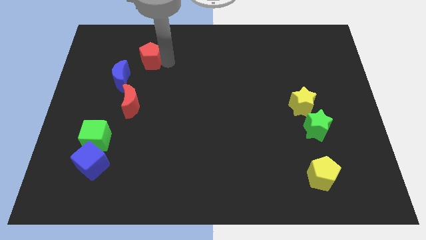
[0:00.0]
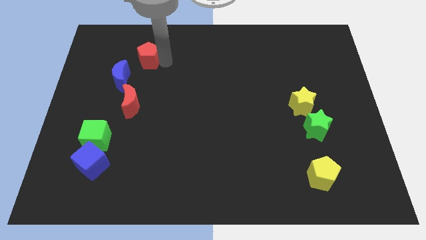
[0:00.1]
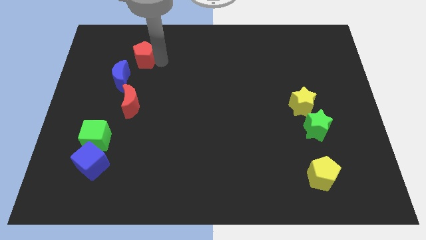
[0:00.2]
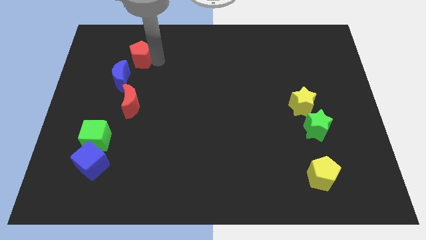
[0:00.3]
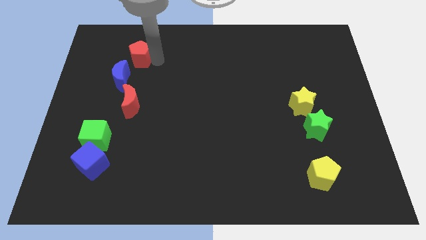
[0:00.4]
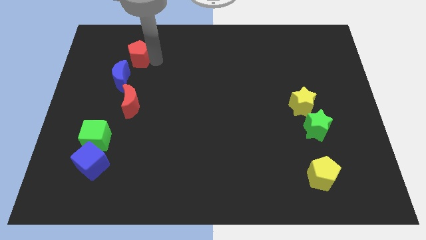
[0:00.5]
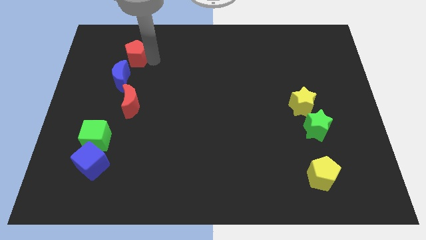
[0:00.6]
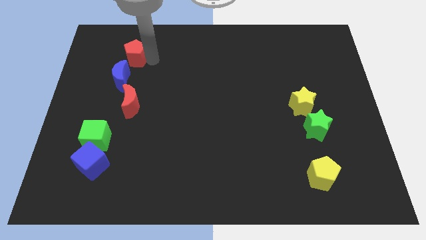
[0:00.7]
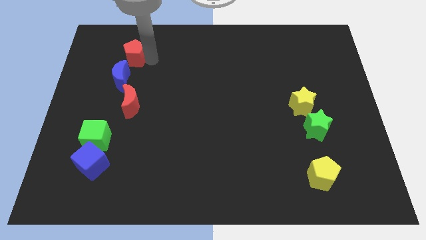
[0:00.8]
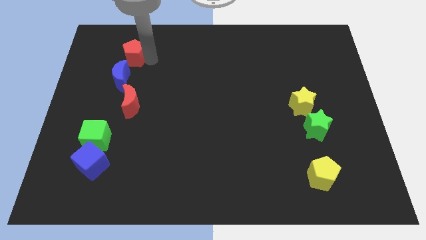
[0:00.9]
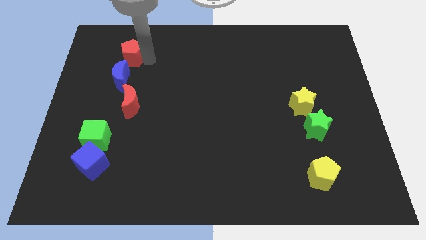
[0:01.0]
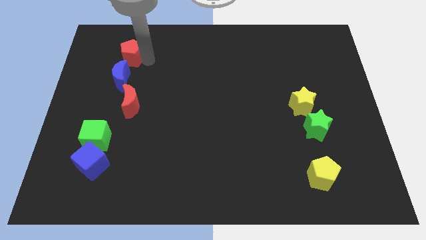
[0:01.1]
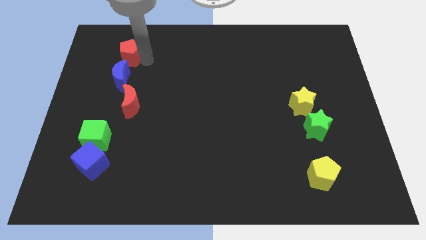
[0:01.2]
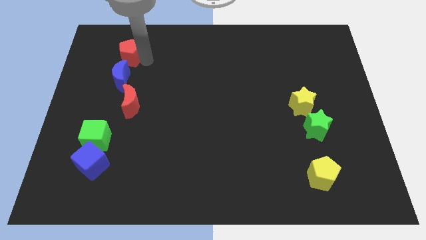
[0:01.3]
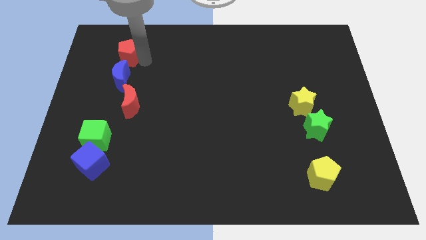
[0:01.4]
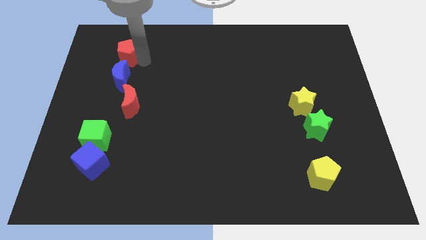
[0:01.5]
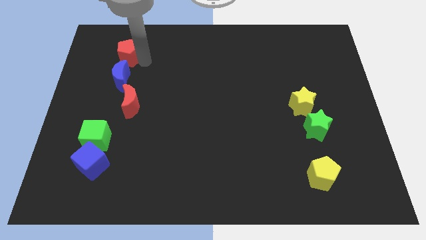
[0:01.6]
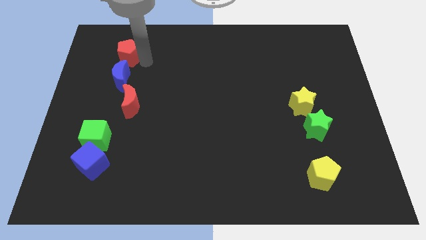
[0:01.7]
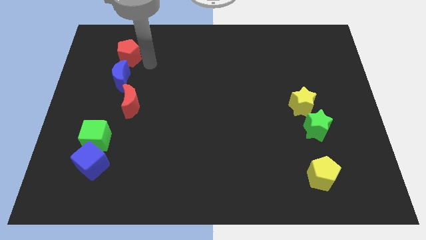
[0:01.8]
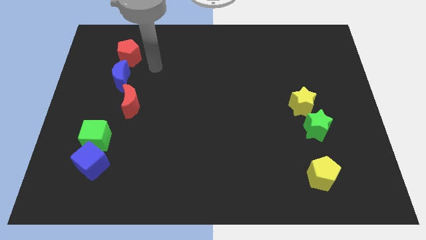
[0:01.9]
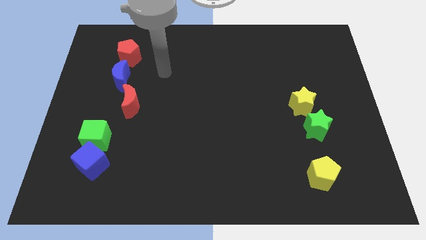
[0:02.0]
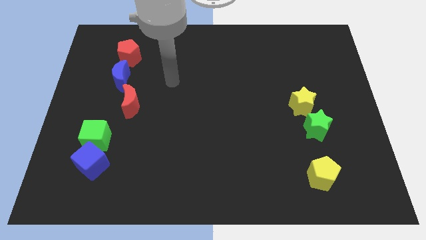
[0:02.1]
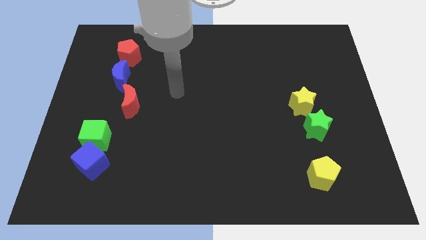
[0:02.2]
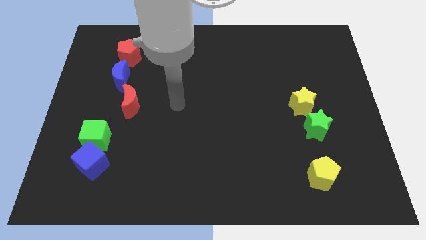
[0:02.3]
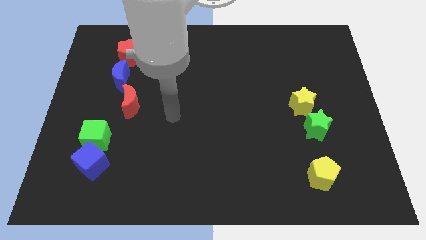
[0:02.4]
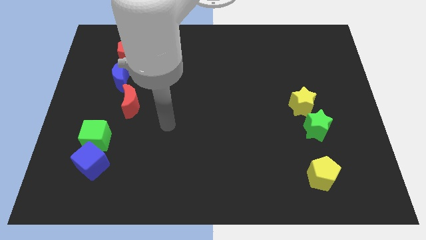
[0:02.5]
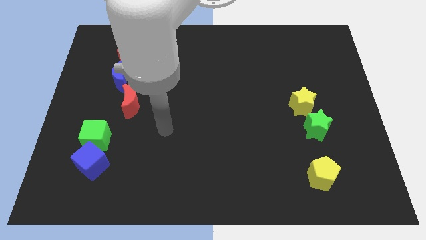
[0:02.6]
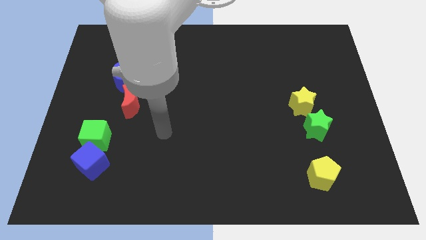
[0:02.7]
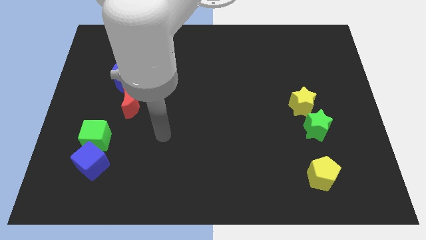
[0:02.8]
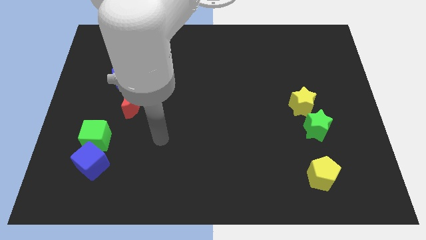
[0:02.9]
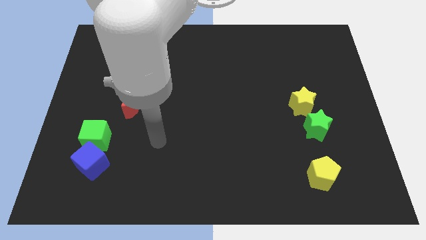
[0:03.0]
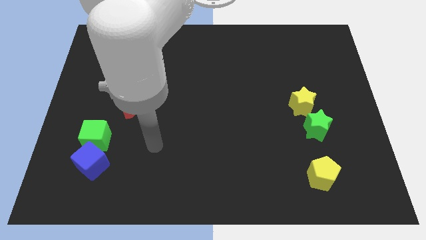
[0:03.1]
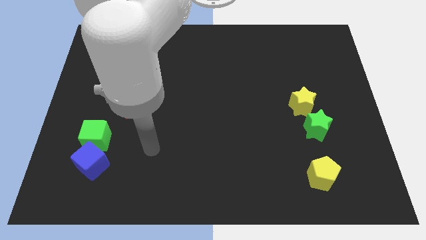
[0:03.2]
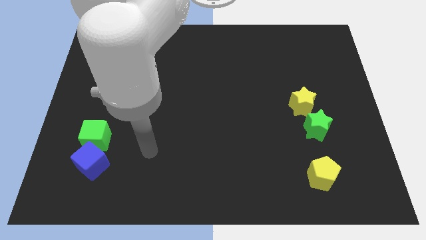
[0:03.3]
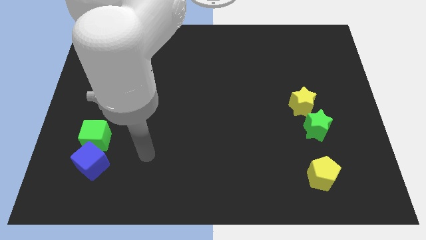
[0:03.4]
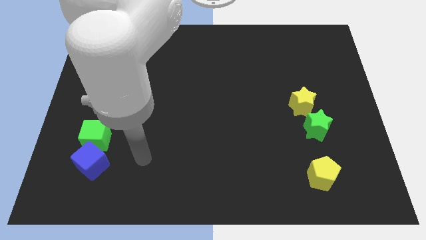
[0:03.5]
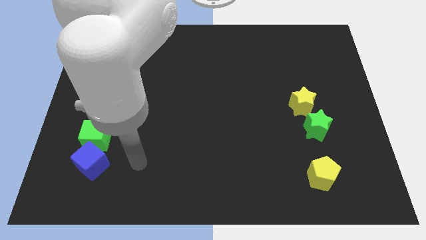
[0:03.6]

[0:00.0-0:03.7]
place the red pentagon on the top of the blue moon

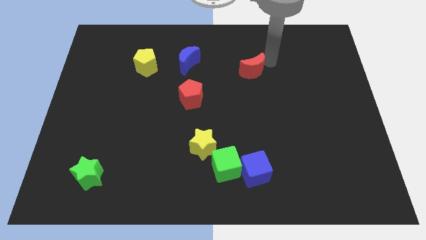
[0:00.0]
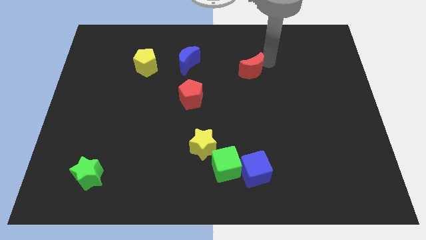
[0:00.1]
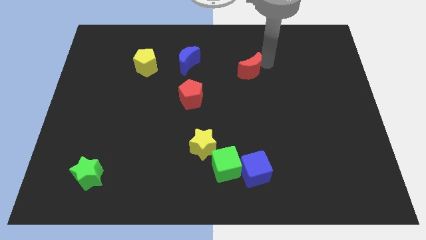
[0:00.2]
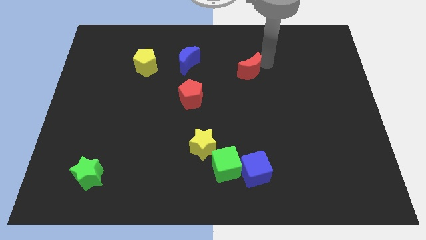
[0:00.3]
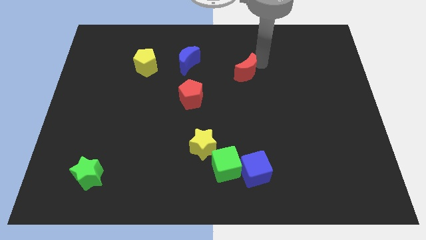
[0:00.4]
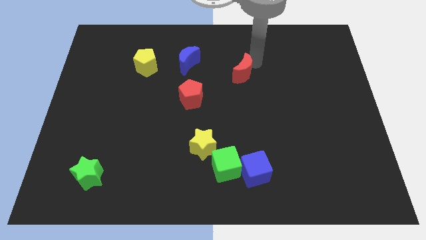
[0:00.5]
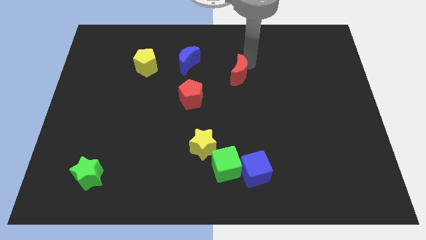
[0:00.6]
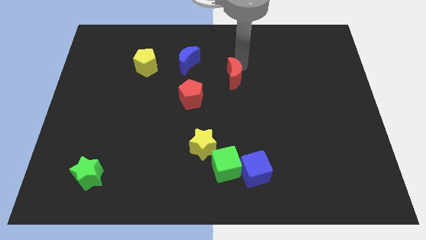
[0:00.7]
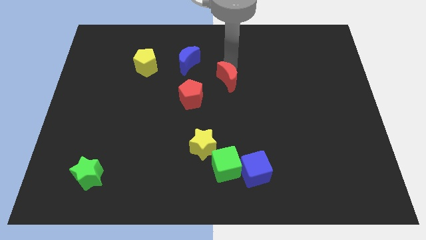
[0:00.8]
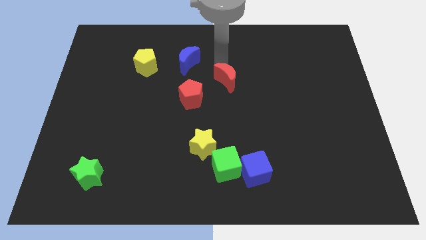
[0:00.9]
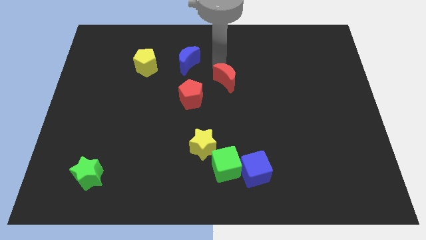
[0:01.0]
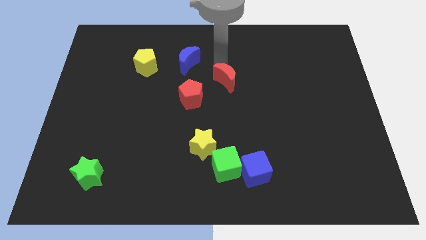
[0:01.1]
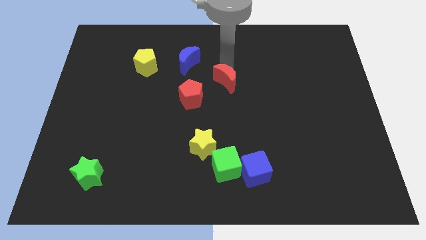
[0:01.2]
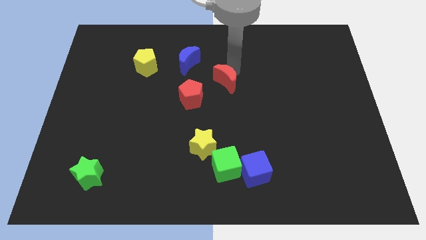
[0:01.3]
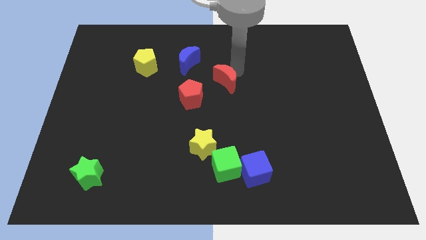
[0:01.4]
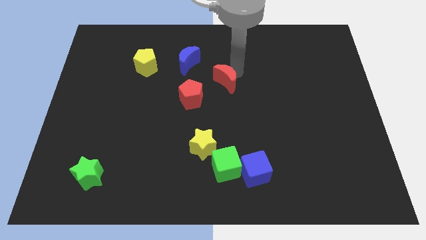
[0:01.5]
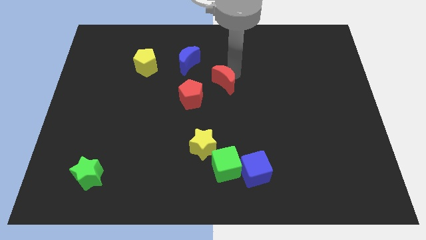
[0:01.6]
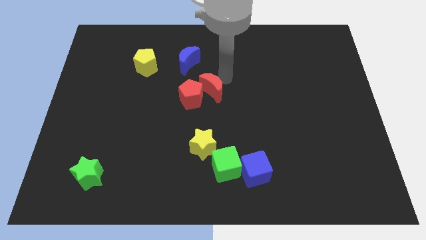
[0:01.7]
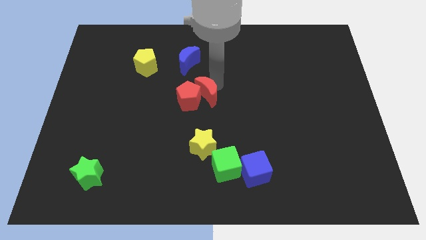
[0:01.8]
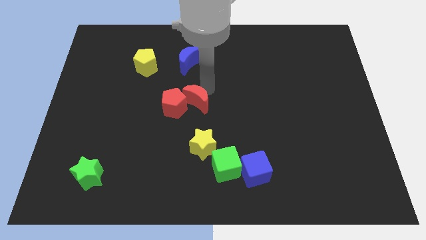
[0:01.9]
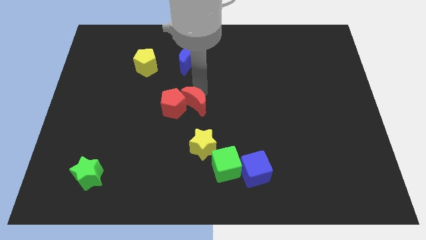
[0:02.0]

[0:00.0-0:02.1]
push red crescent above yellow star

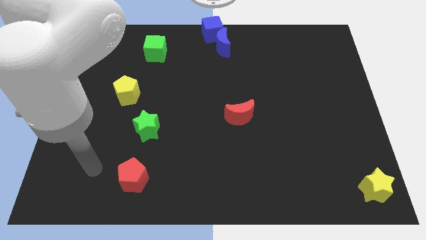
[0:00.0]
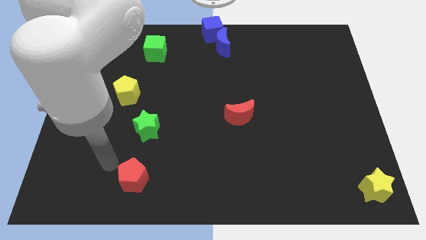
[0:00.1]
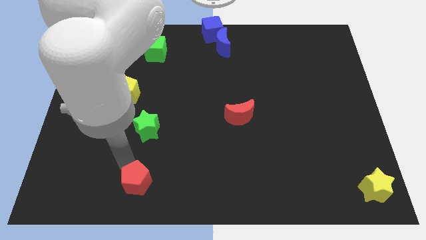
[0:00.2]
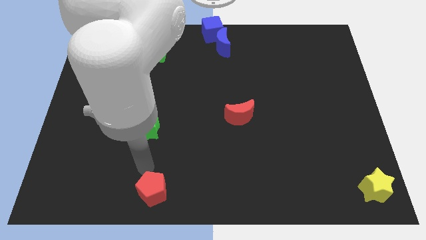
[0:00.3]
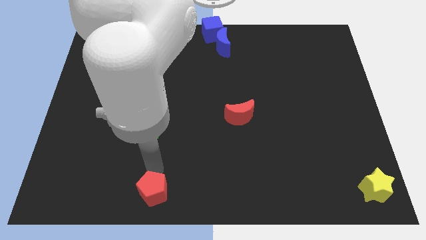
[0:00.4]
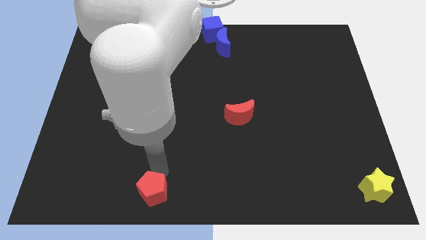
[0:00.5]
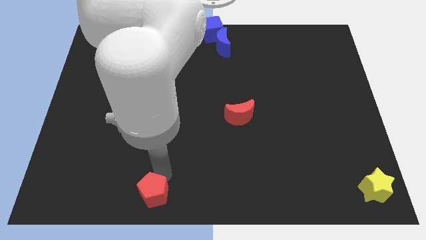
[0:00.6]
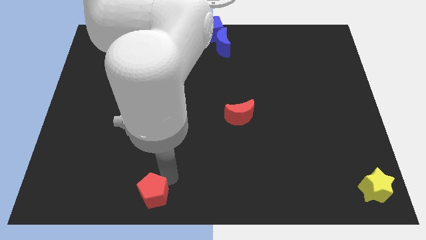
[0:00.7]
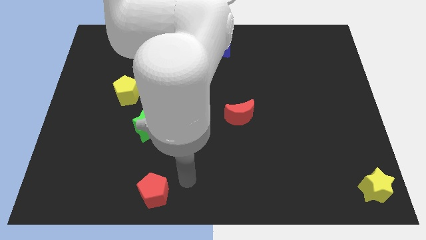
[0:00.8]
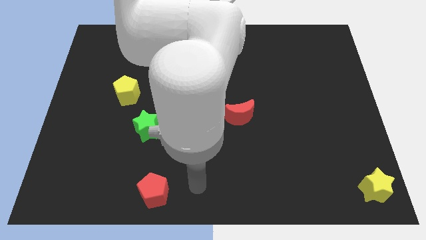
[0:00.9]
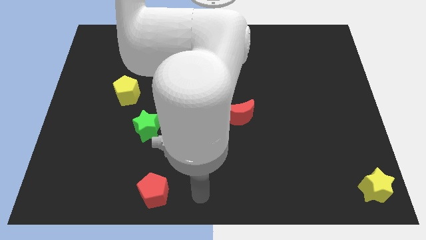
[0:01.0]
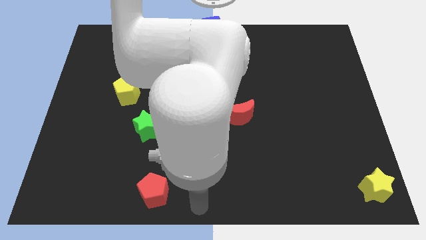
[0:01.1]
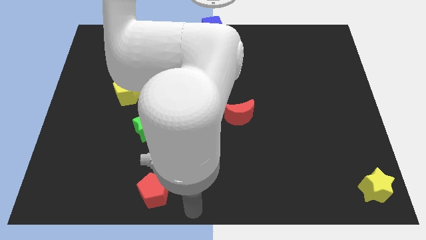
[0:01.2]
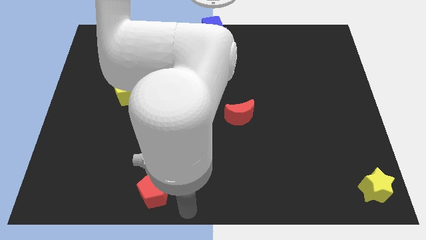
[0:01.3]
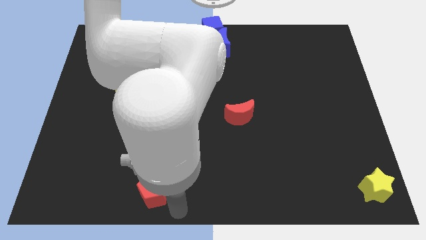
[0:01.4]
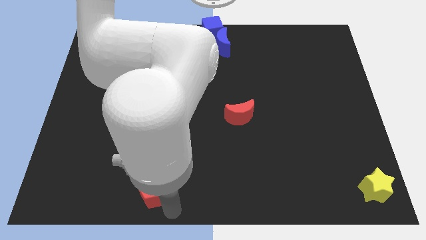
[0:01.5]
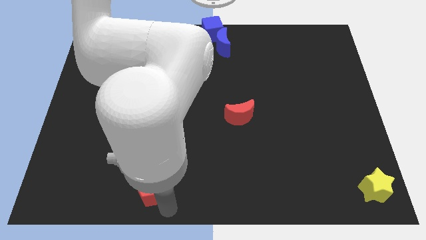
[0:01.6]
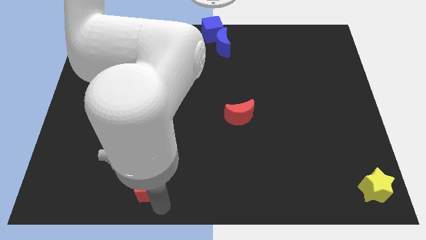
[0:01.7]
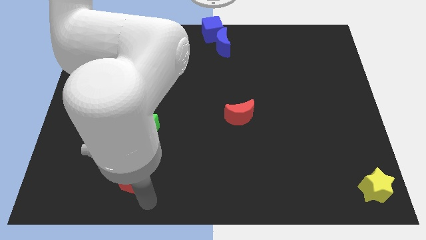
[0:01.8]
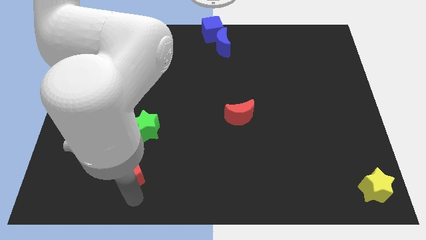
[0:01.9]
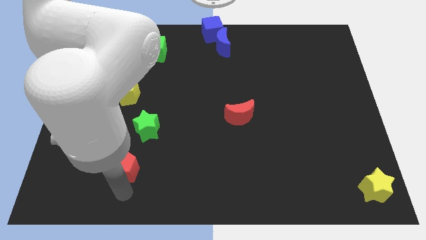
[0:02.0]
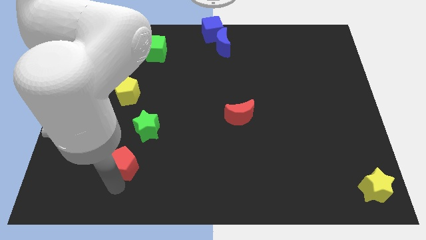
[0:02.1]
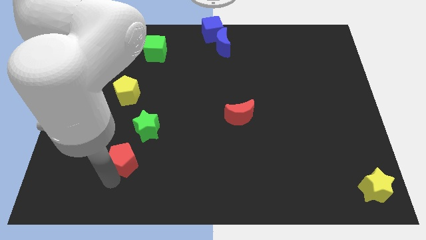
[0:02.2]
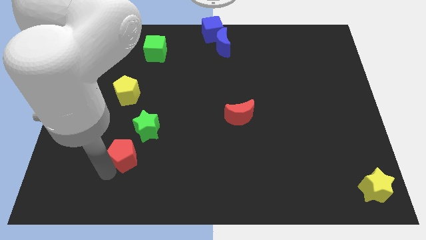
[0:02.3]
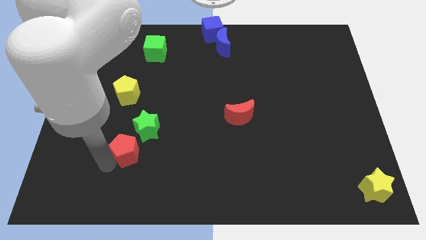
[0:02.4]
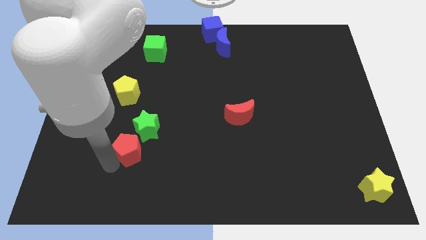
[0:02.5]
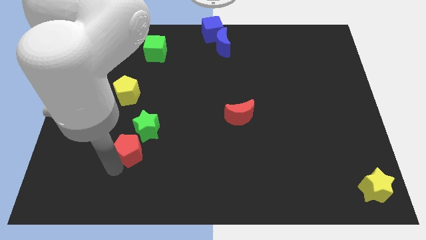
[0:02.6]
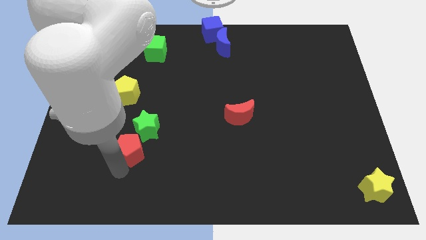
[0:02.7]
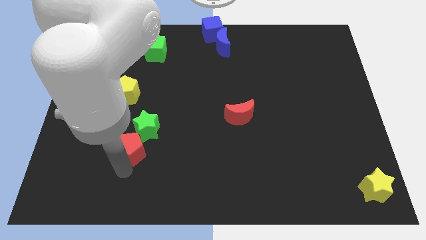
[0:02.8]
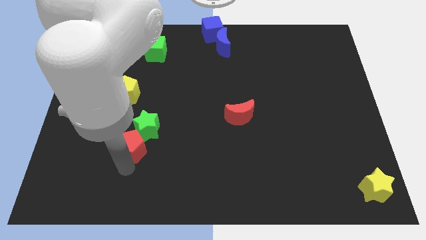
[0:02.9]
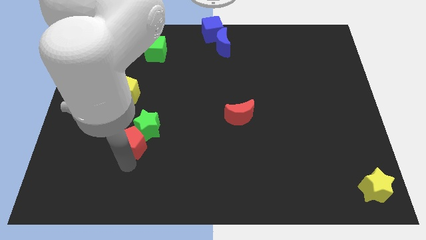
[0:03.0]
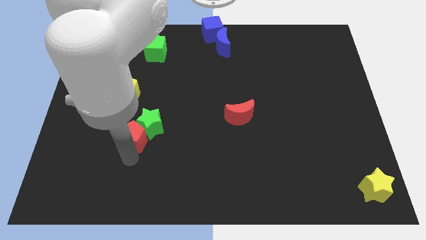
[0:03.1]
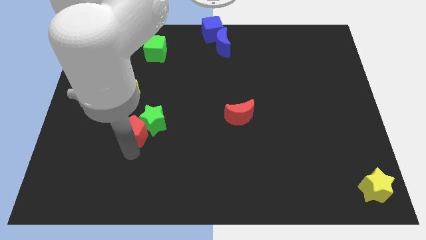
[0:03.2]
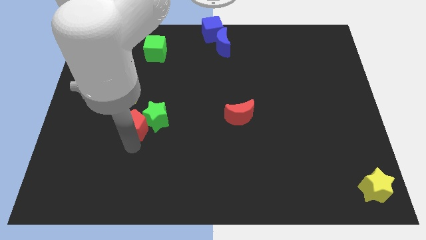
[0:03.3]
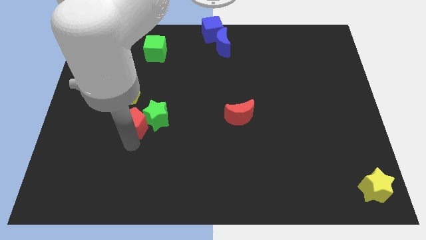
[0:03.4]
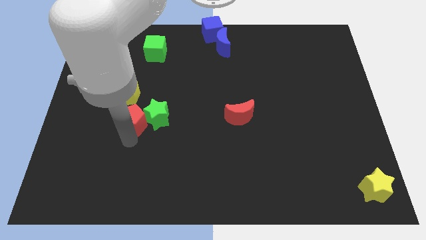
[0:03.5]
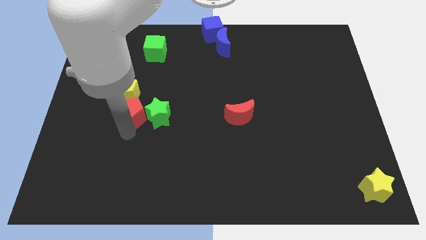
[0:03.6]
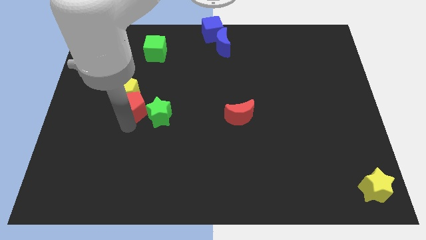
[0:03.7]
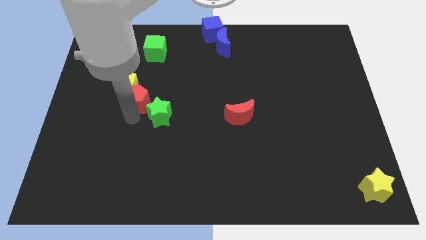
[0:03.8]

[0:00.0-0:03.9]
place red pentagon in between green star and yellow pentagon
